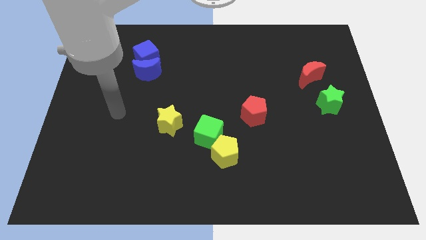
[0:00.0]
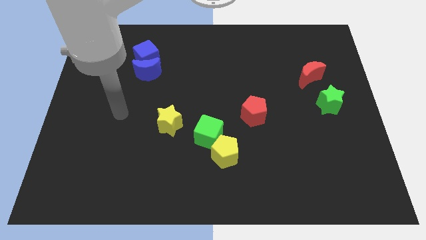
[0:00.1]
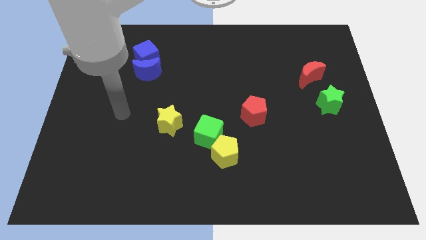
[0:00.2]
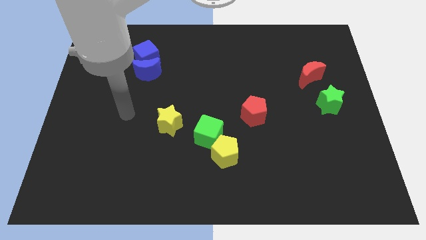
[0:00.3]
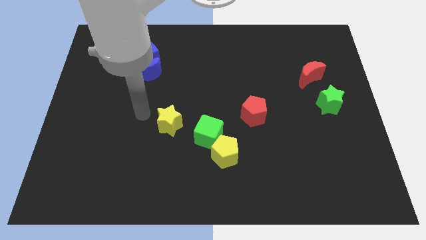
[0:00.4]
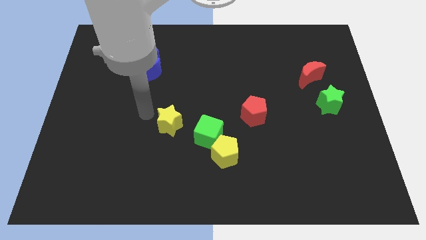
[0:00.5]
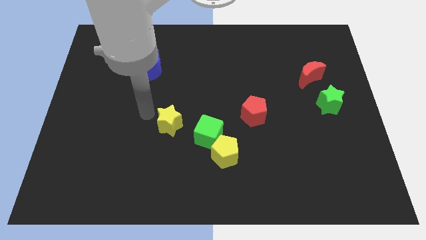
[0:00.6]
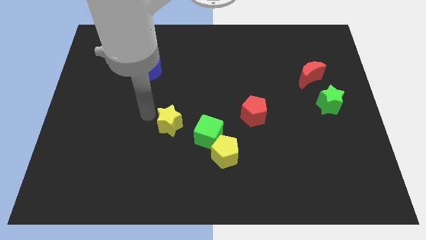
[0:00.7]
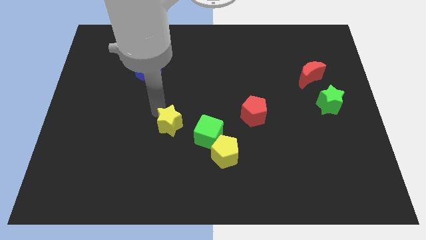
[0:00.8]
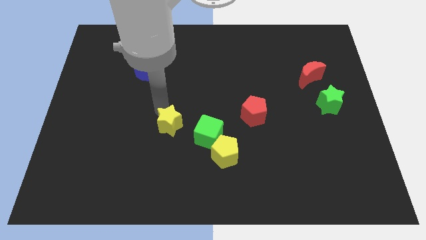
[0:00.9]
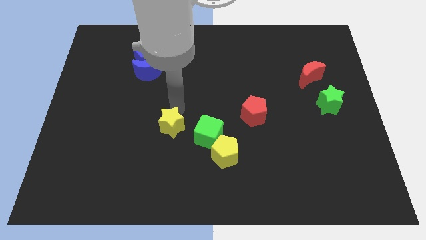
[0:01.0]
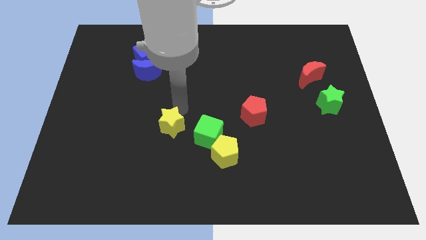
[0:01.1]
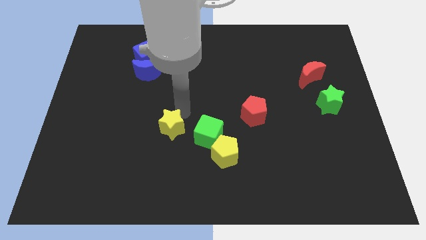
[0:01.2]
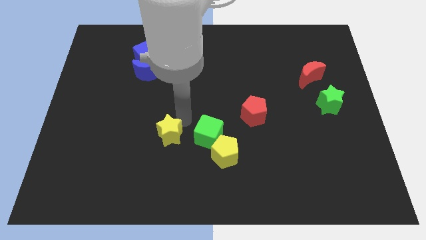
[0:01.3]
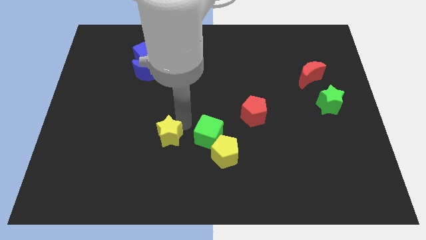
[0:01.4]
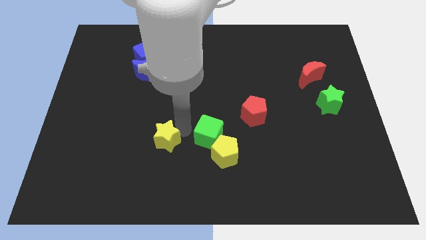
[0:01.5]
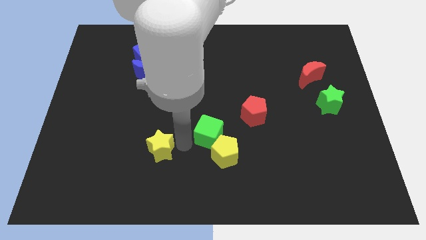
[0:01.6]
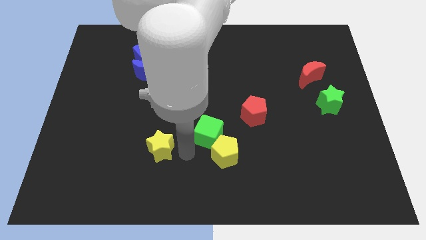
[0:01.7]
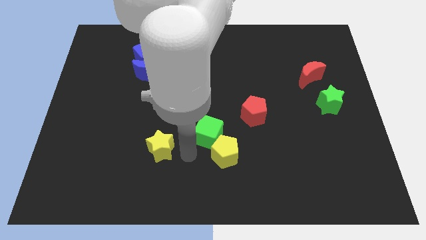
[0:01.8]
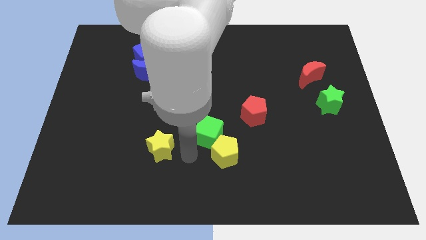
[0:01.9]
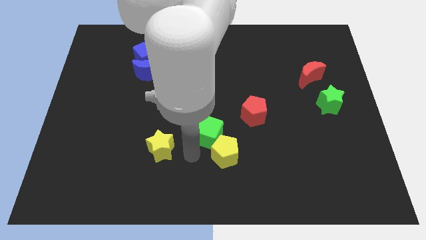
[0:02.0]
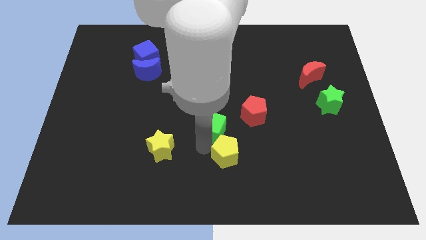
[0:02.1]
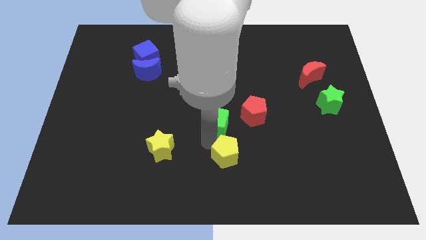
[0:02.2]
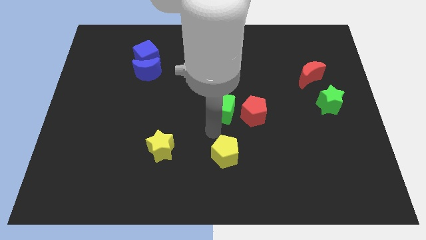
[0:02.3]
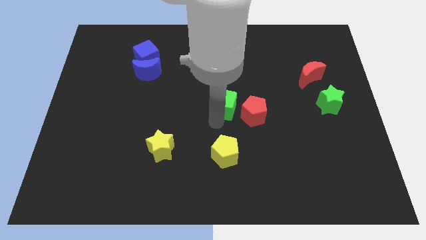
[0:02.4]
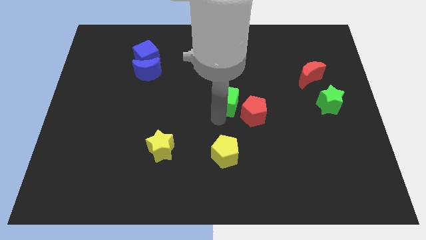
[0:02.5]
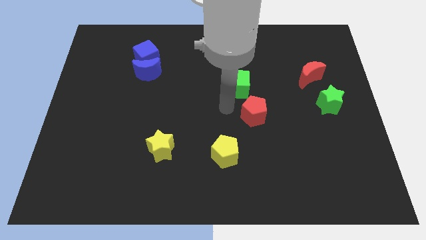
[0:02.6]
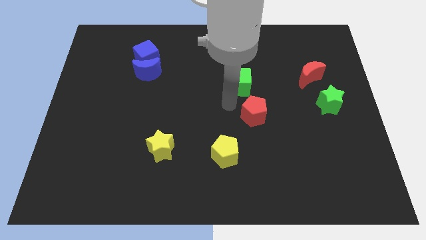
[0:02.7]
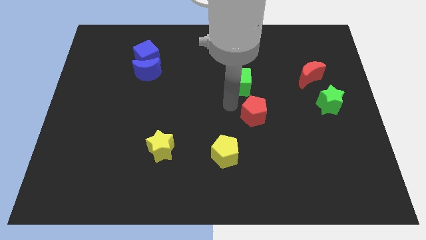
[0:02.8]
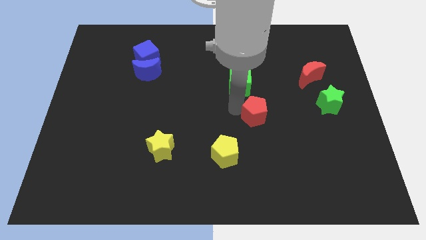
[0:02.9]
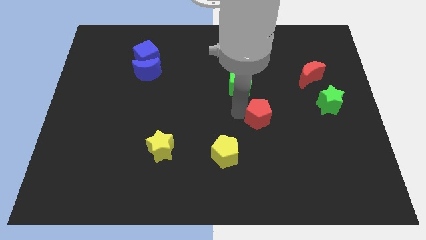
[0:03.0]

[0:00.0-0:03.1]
separate the yellow star from the green cube

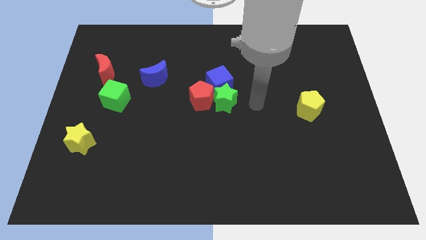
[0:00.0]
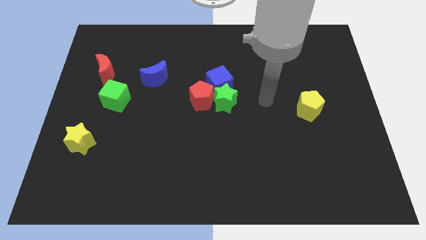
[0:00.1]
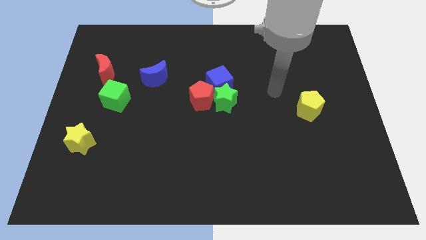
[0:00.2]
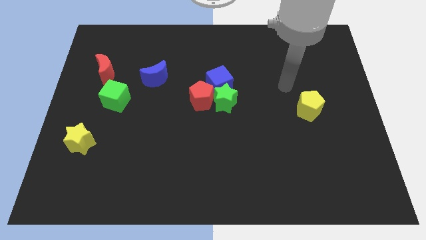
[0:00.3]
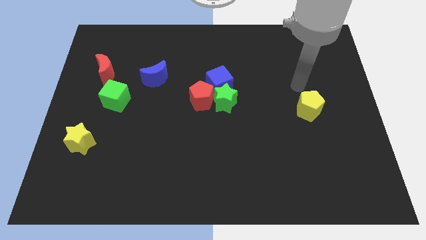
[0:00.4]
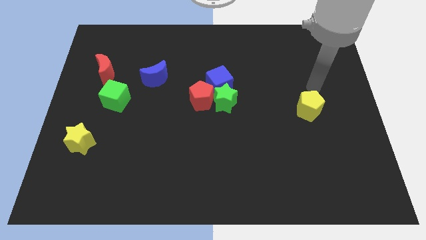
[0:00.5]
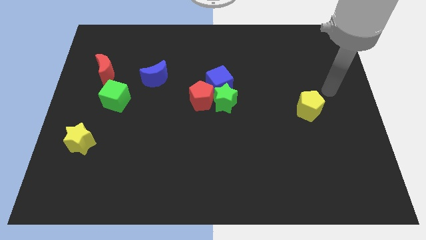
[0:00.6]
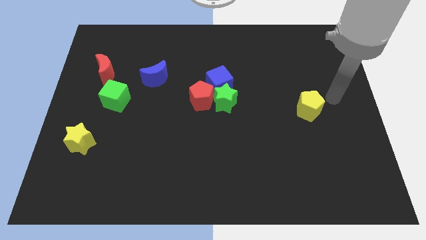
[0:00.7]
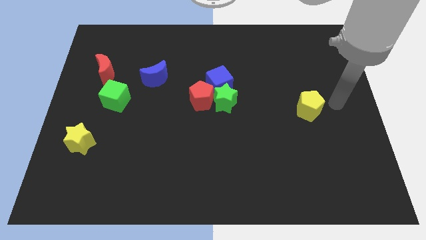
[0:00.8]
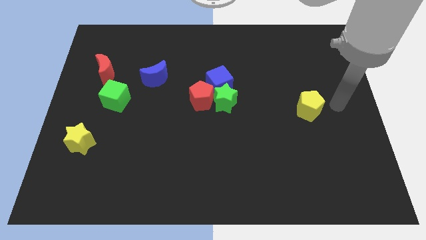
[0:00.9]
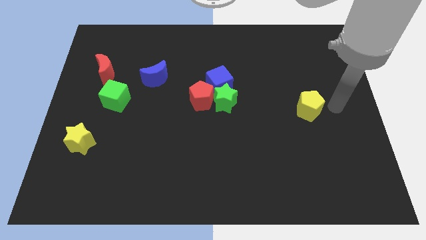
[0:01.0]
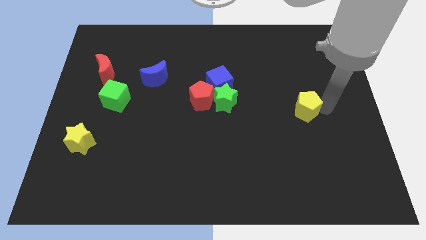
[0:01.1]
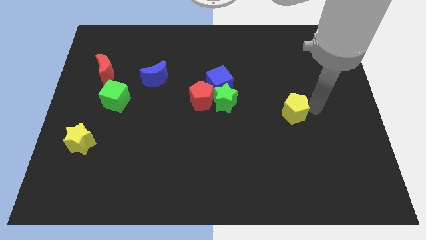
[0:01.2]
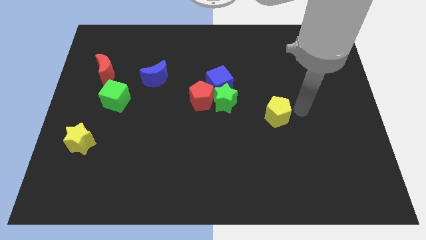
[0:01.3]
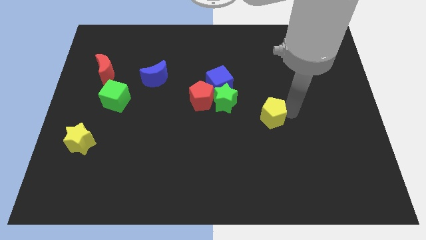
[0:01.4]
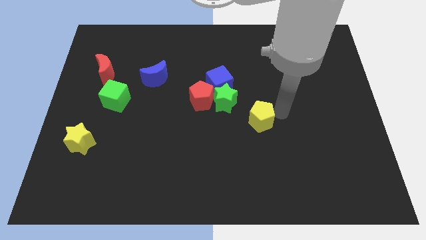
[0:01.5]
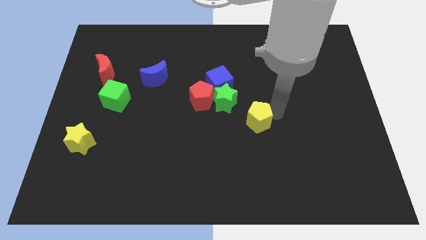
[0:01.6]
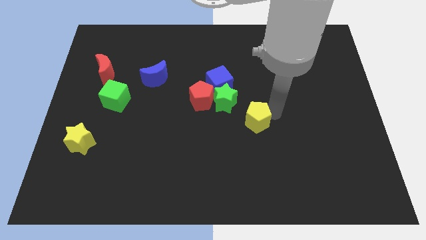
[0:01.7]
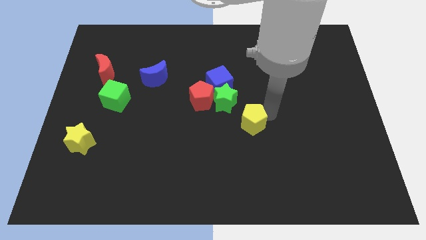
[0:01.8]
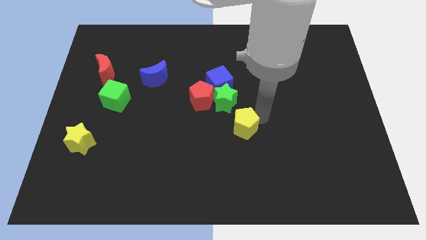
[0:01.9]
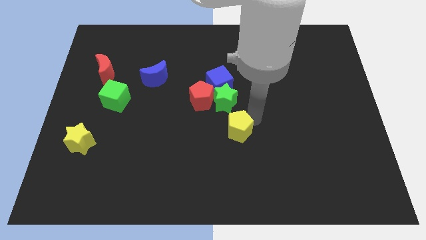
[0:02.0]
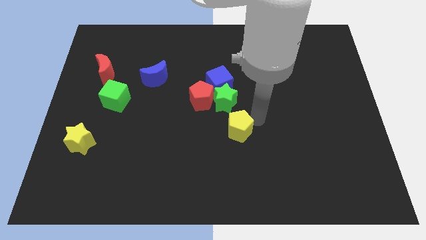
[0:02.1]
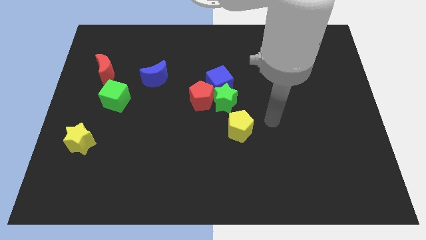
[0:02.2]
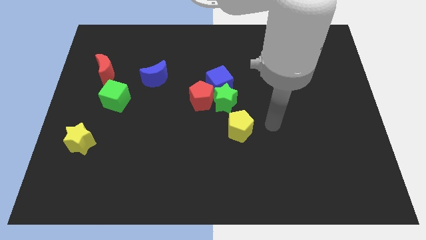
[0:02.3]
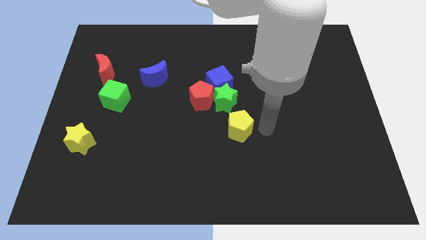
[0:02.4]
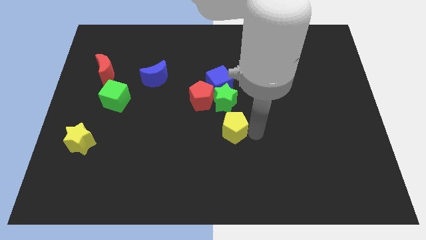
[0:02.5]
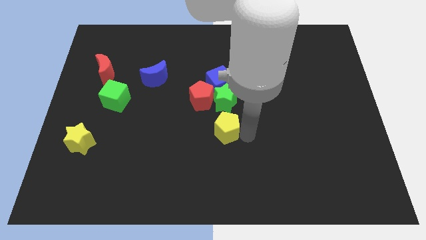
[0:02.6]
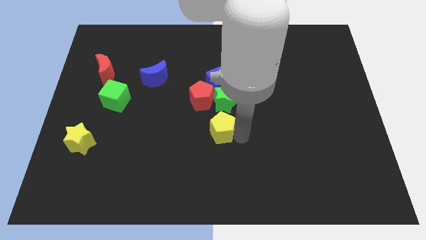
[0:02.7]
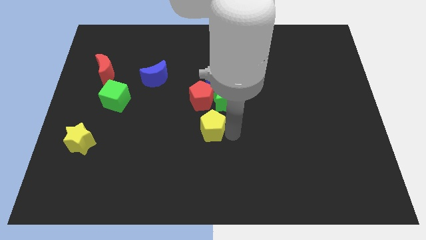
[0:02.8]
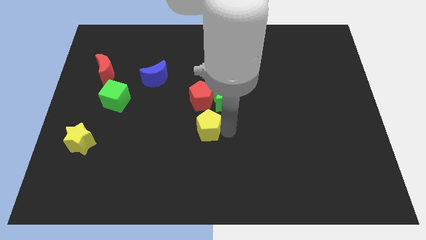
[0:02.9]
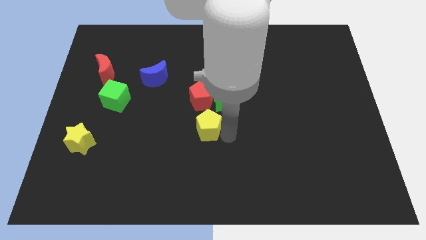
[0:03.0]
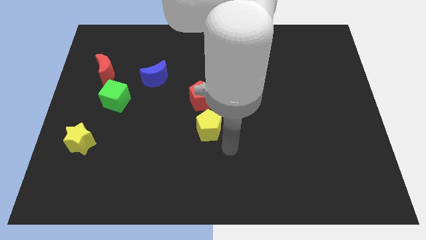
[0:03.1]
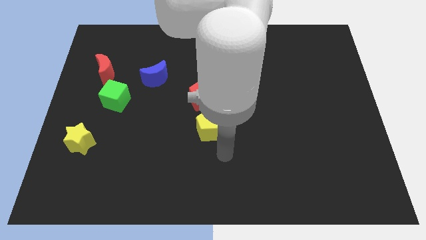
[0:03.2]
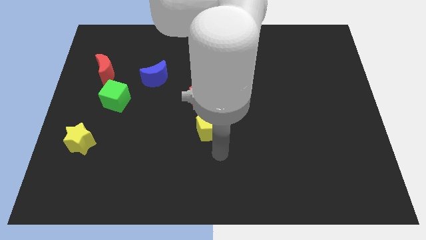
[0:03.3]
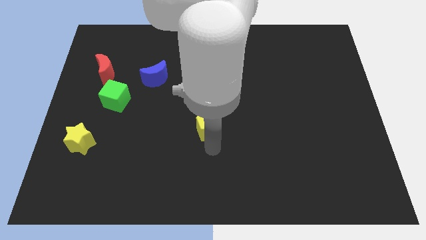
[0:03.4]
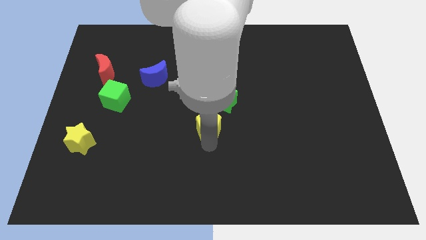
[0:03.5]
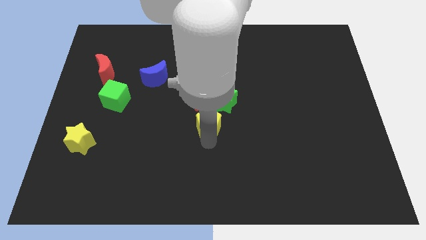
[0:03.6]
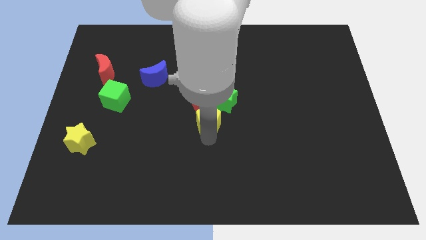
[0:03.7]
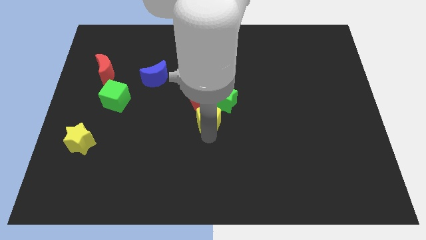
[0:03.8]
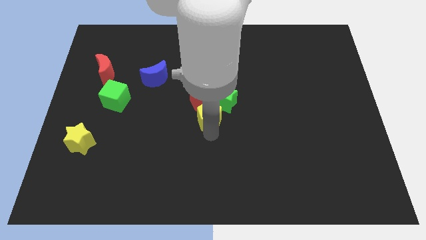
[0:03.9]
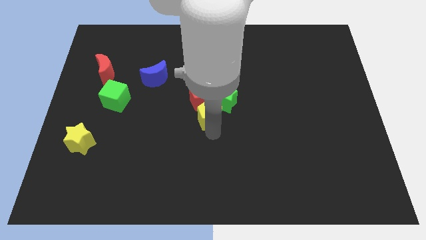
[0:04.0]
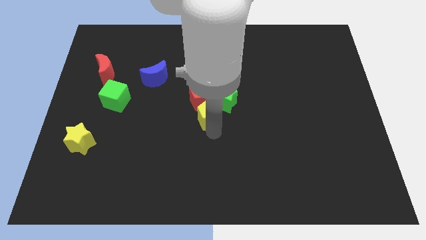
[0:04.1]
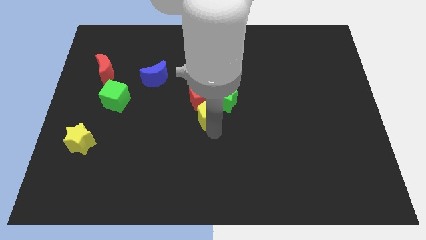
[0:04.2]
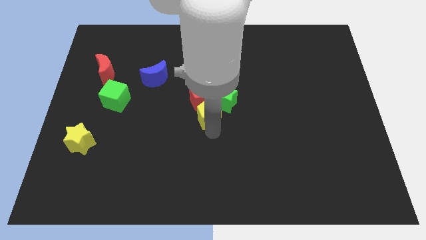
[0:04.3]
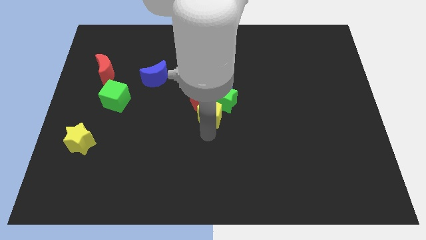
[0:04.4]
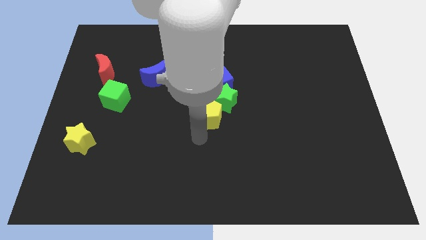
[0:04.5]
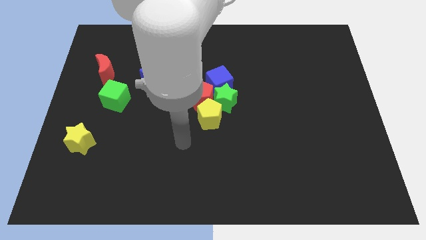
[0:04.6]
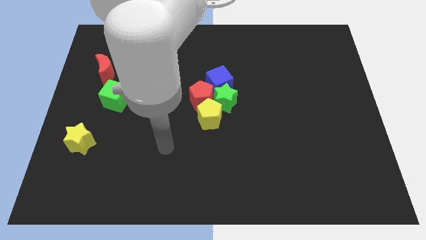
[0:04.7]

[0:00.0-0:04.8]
push the yellow pentagon into the red pentagon

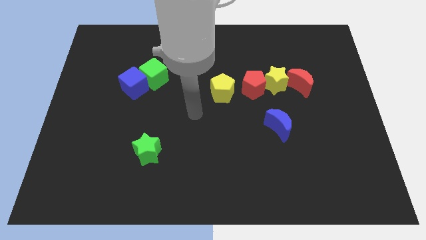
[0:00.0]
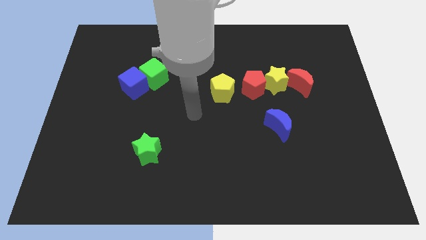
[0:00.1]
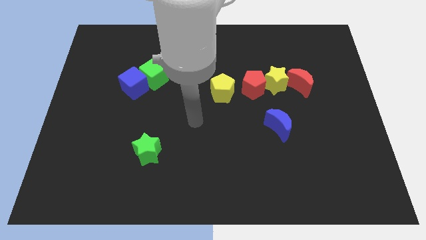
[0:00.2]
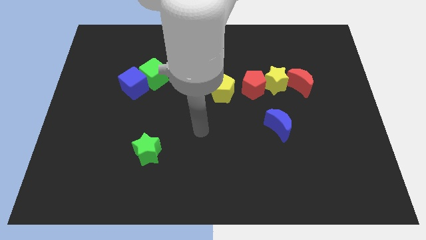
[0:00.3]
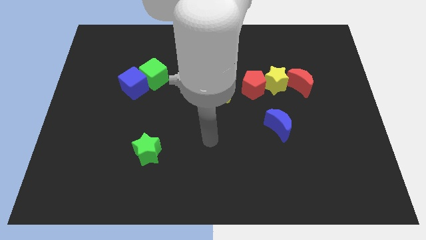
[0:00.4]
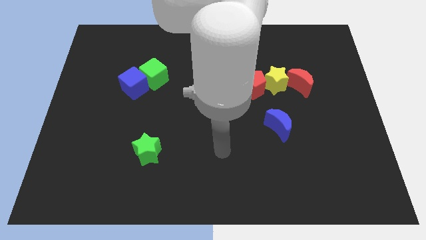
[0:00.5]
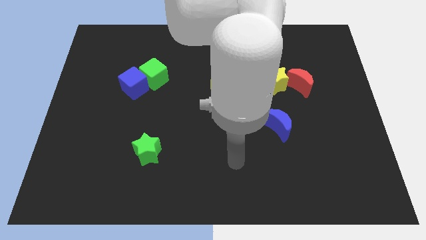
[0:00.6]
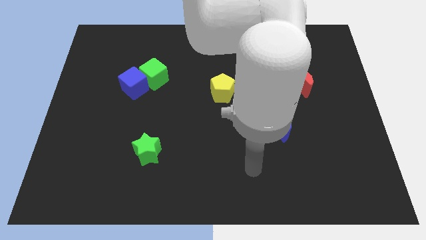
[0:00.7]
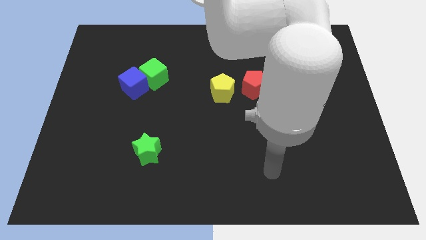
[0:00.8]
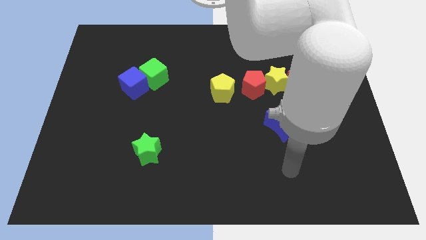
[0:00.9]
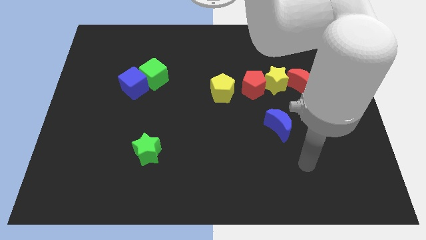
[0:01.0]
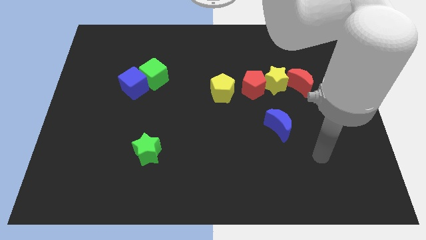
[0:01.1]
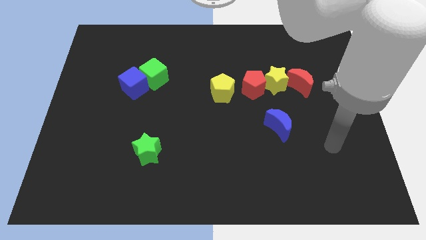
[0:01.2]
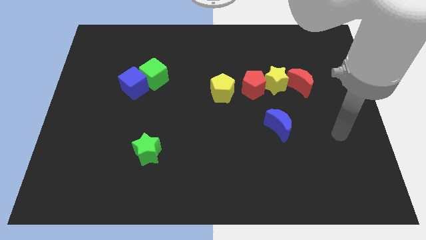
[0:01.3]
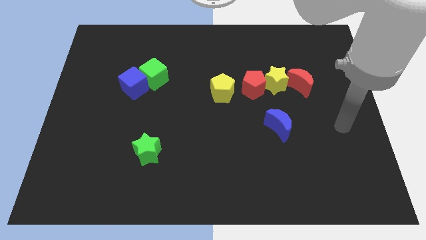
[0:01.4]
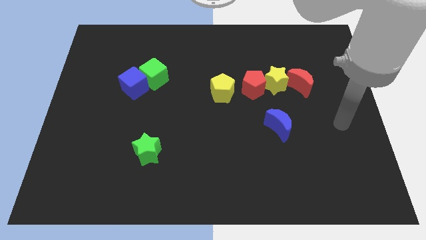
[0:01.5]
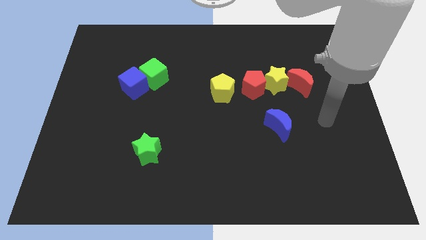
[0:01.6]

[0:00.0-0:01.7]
move your arm to the right of the blue moon
